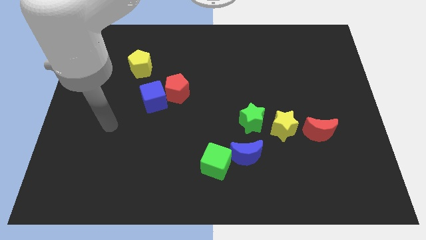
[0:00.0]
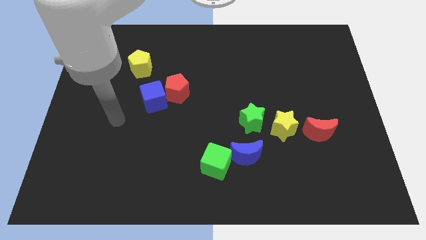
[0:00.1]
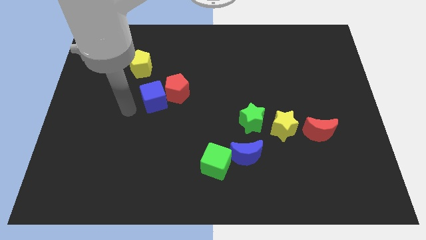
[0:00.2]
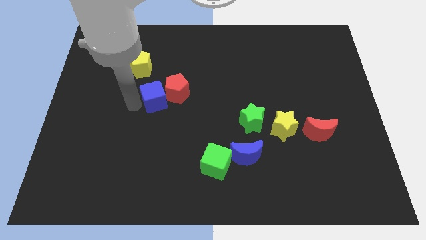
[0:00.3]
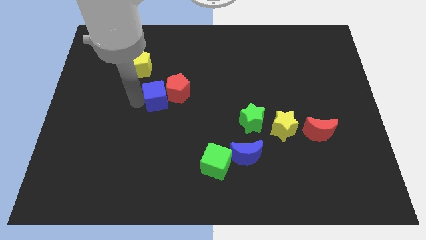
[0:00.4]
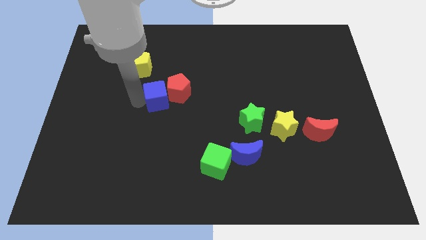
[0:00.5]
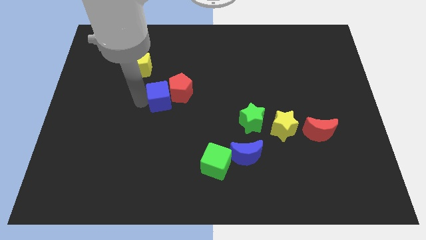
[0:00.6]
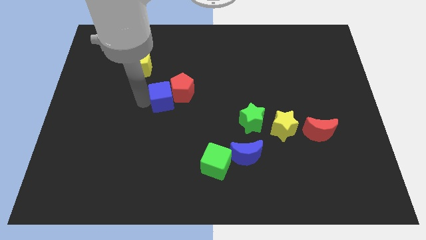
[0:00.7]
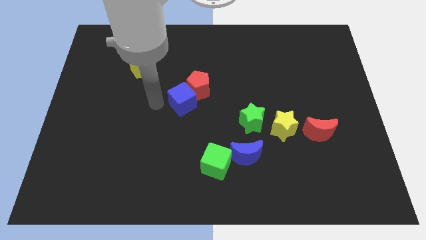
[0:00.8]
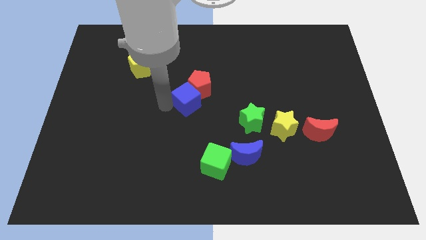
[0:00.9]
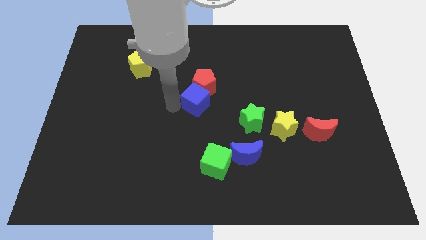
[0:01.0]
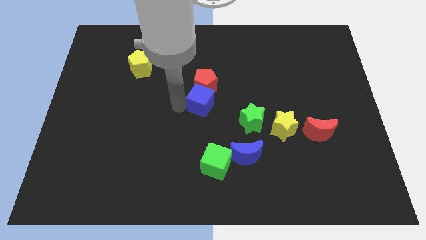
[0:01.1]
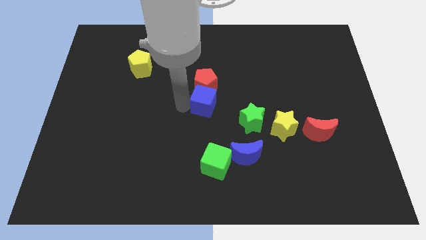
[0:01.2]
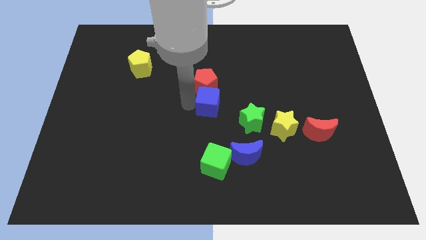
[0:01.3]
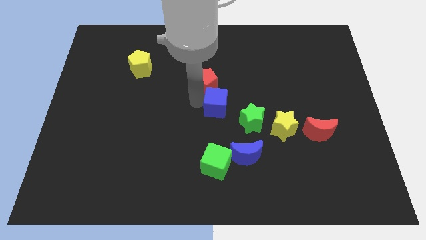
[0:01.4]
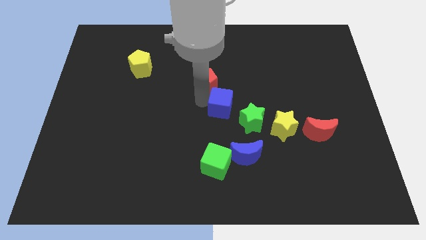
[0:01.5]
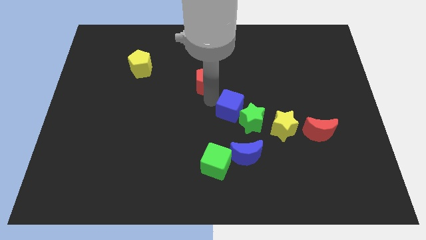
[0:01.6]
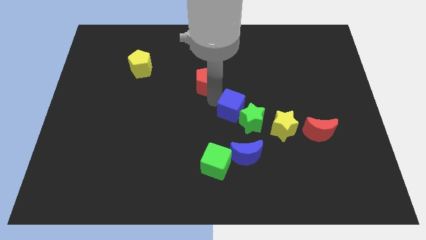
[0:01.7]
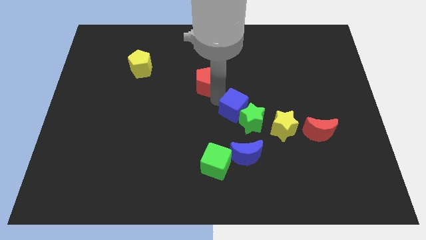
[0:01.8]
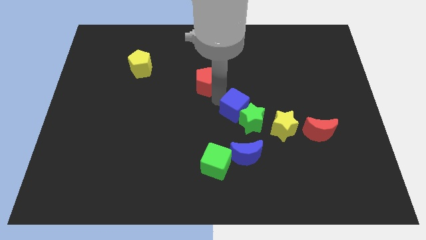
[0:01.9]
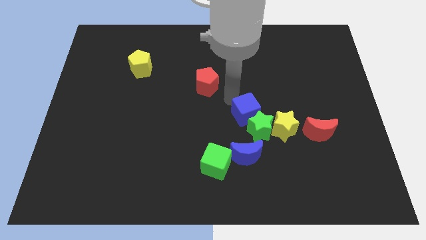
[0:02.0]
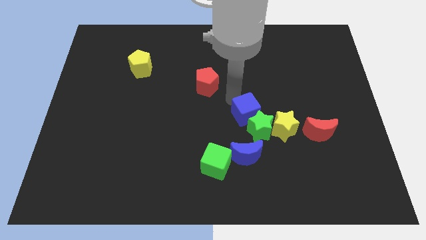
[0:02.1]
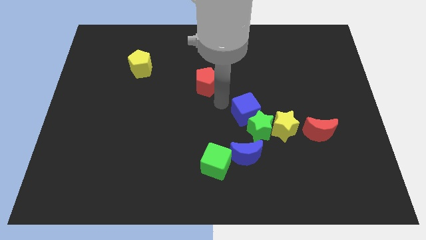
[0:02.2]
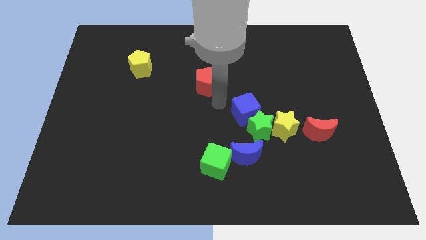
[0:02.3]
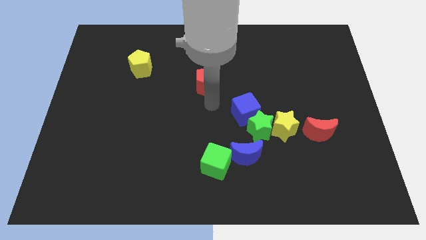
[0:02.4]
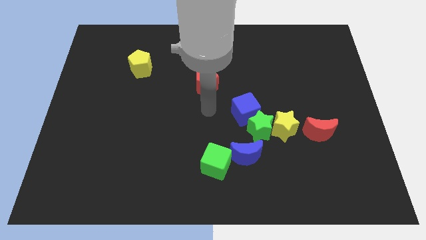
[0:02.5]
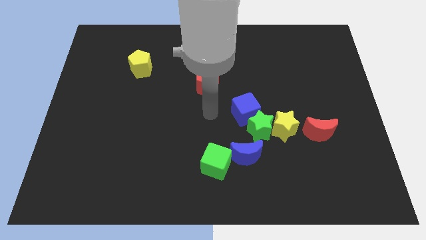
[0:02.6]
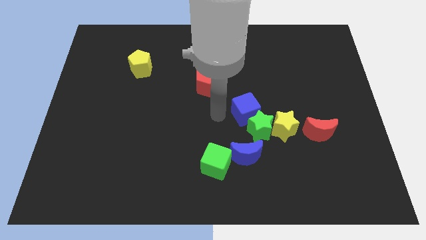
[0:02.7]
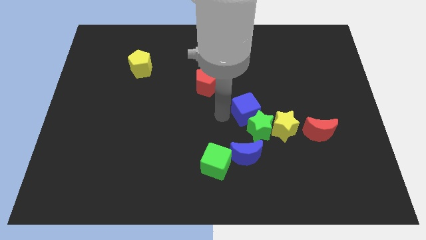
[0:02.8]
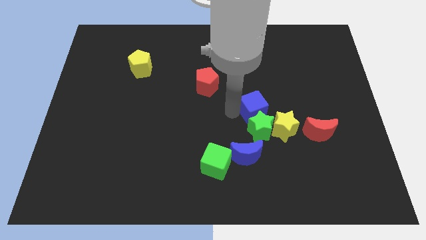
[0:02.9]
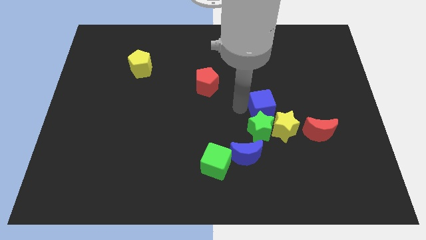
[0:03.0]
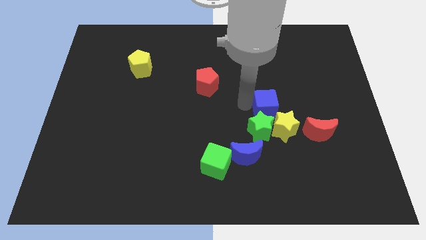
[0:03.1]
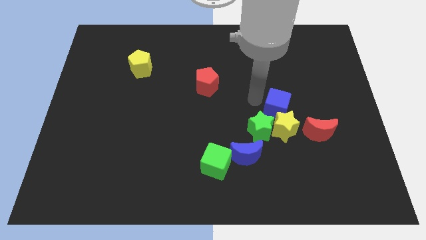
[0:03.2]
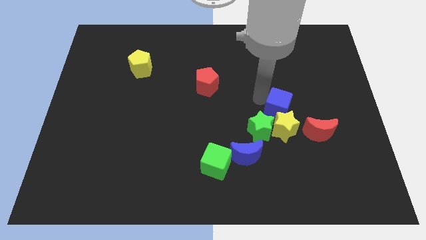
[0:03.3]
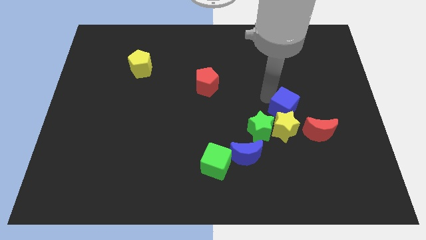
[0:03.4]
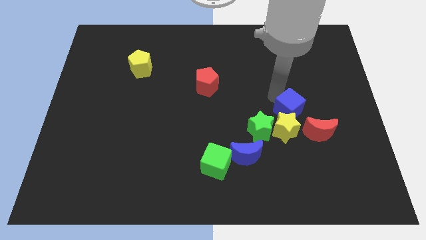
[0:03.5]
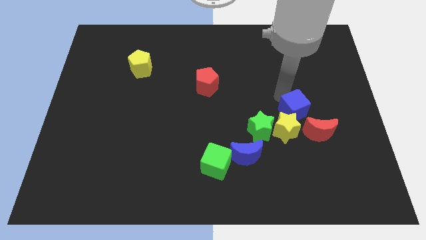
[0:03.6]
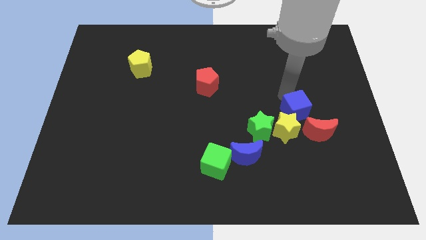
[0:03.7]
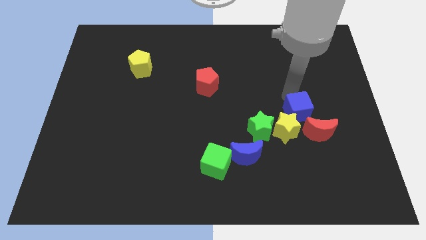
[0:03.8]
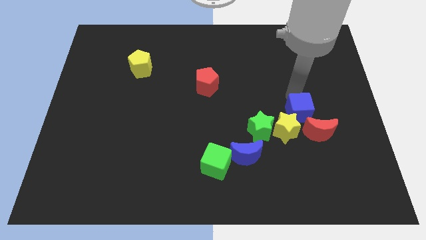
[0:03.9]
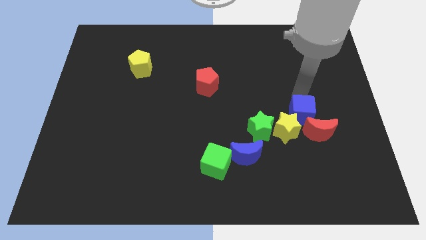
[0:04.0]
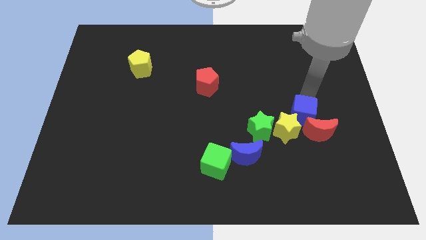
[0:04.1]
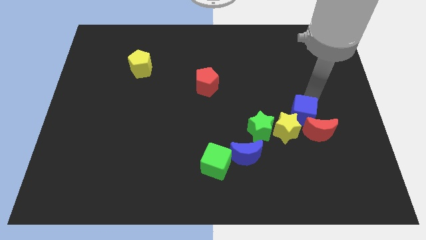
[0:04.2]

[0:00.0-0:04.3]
move the blue cube to the red moon

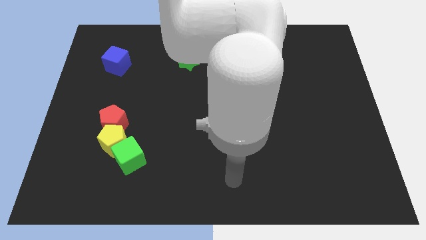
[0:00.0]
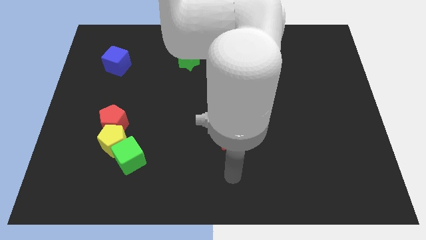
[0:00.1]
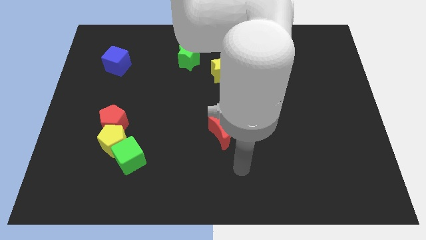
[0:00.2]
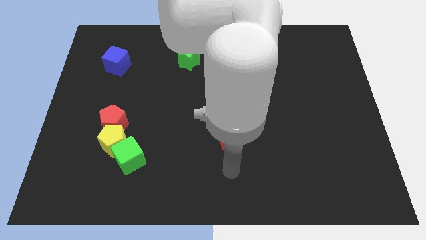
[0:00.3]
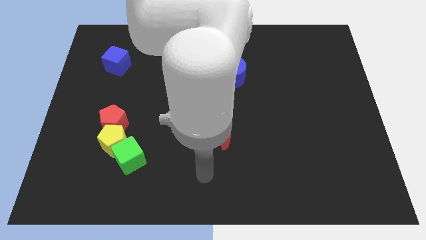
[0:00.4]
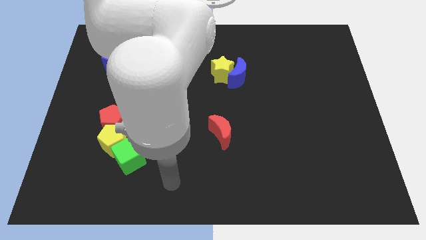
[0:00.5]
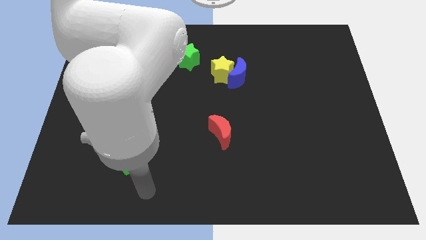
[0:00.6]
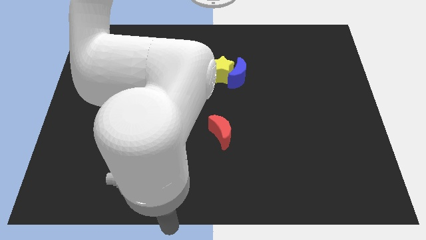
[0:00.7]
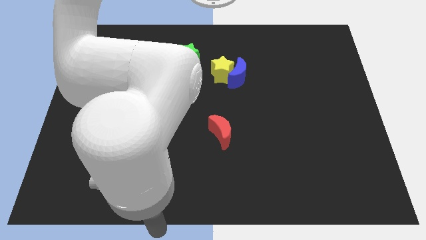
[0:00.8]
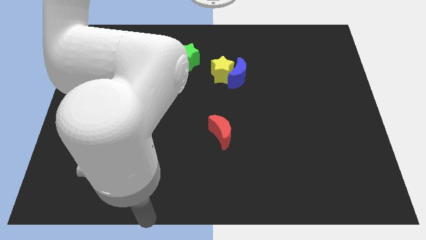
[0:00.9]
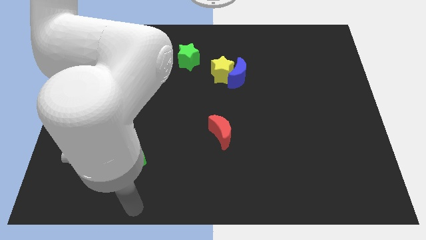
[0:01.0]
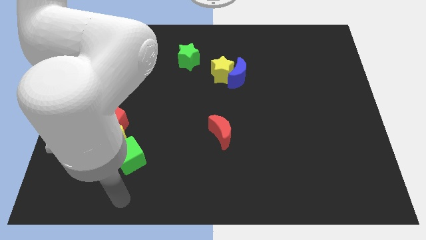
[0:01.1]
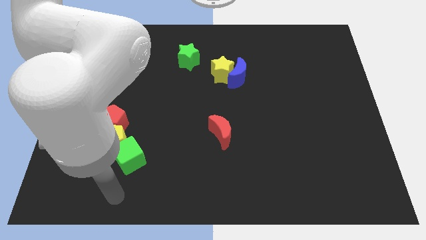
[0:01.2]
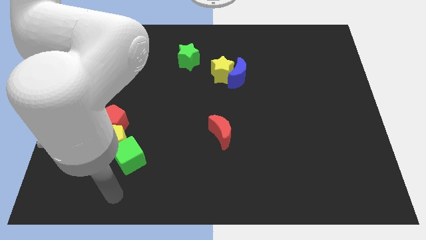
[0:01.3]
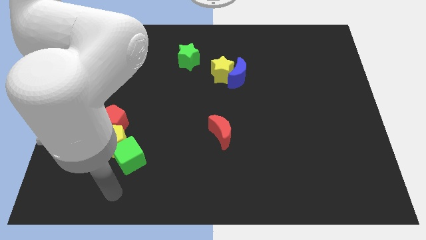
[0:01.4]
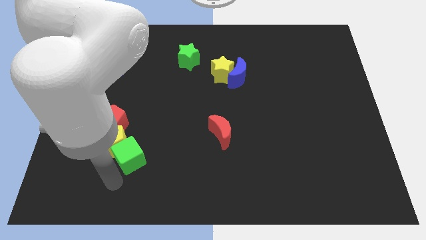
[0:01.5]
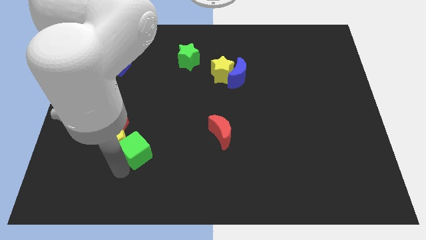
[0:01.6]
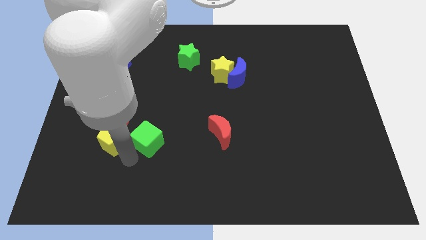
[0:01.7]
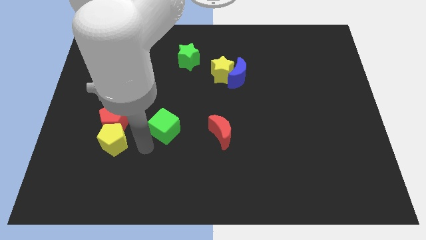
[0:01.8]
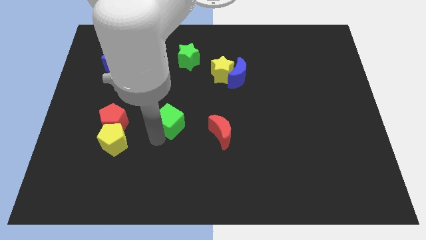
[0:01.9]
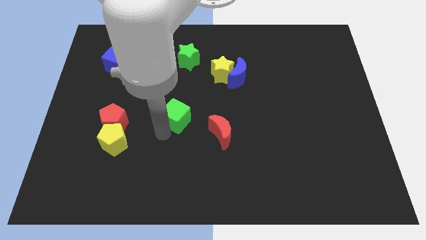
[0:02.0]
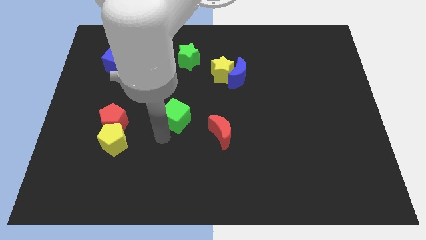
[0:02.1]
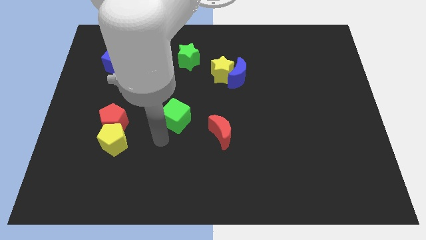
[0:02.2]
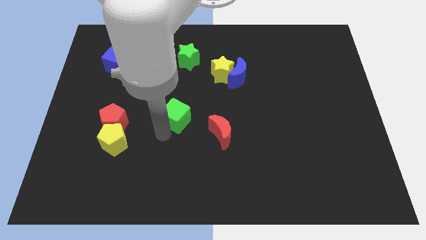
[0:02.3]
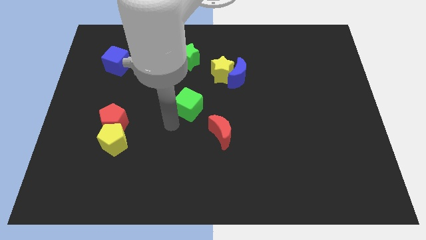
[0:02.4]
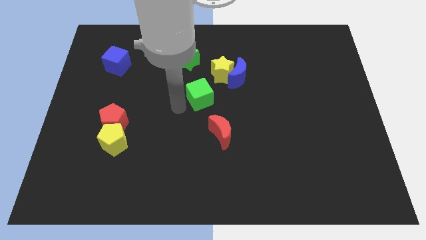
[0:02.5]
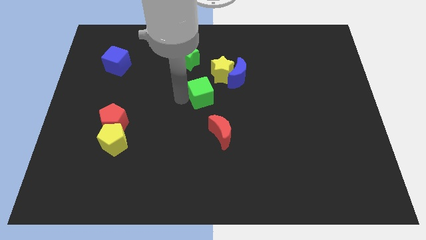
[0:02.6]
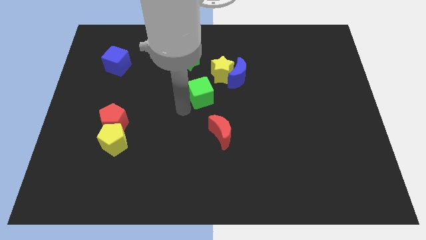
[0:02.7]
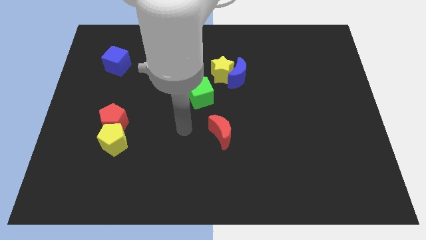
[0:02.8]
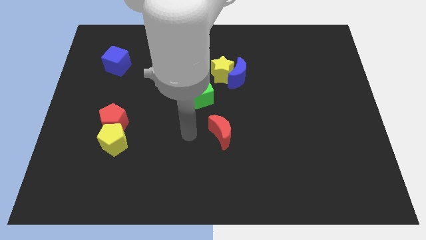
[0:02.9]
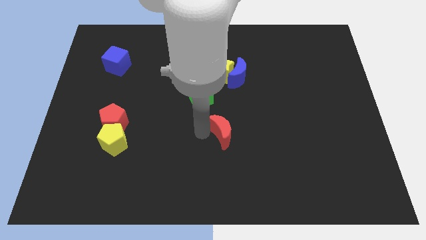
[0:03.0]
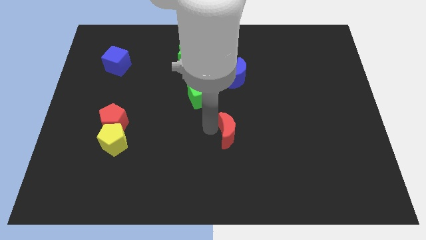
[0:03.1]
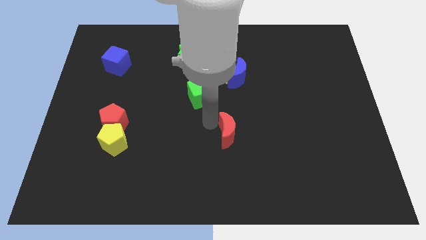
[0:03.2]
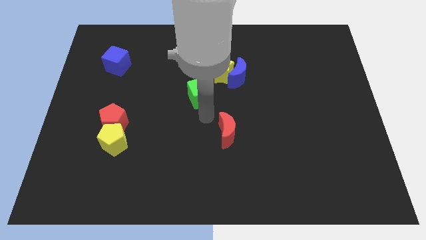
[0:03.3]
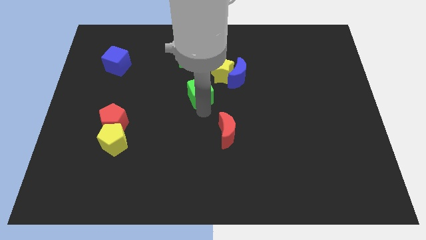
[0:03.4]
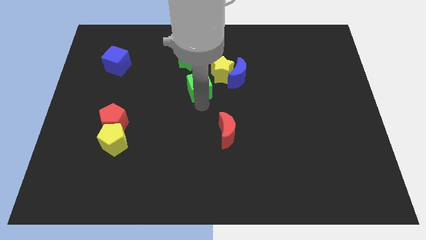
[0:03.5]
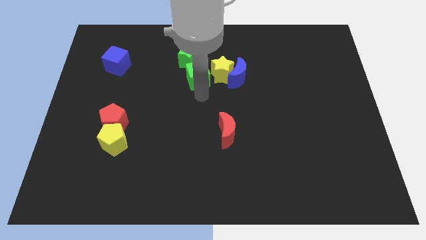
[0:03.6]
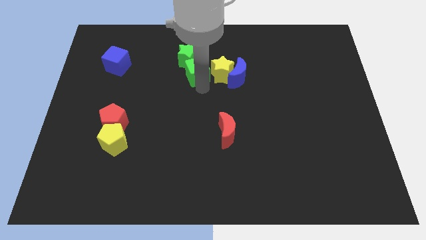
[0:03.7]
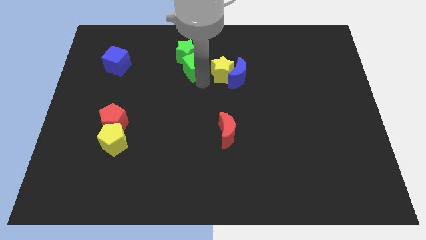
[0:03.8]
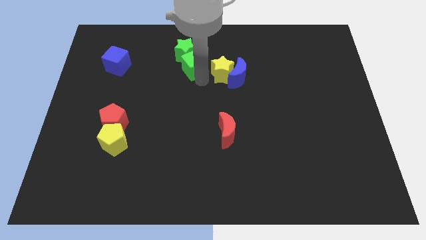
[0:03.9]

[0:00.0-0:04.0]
move the green cube towards the green star
